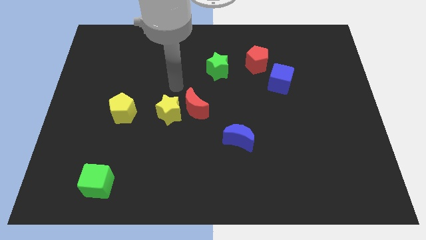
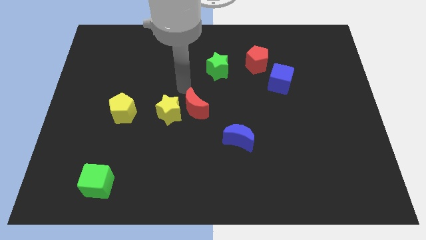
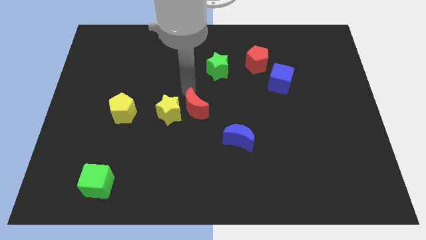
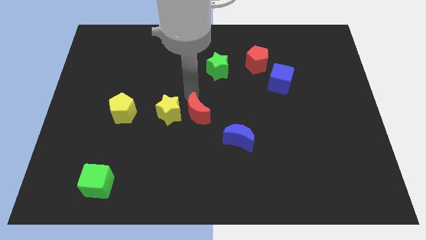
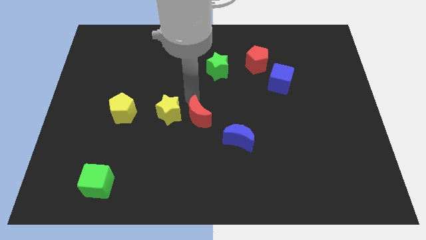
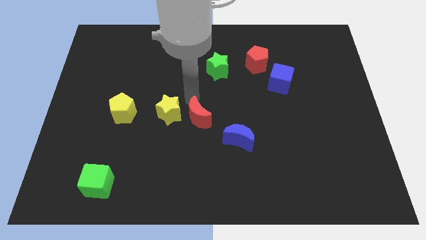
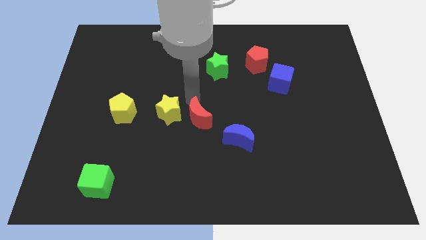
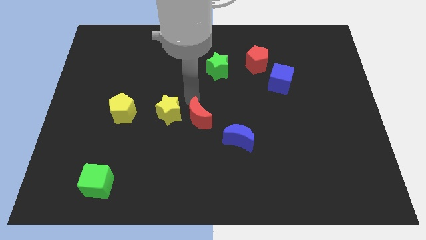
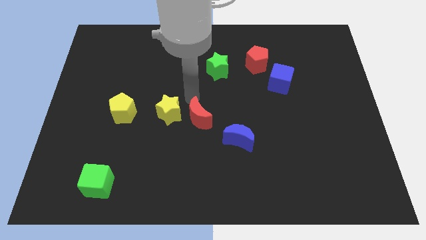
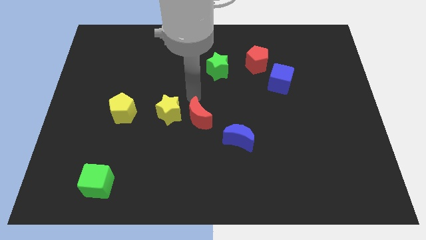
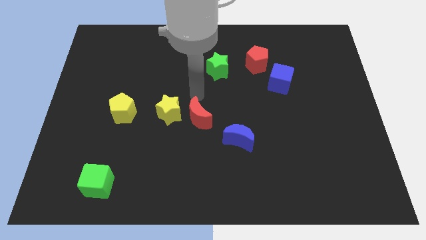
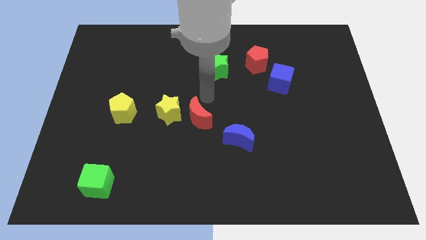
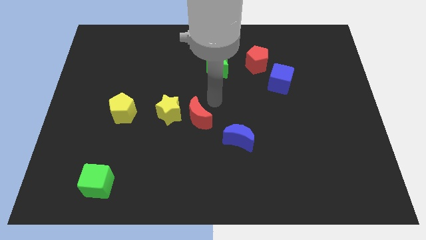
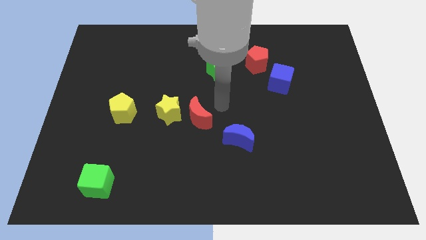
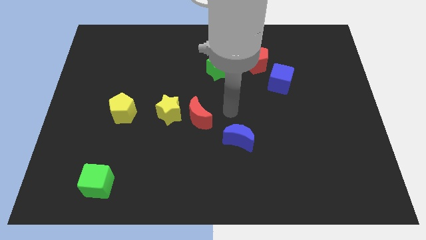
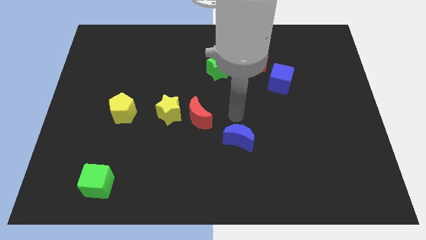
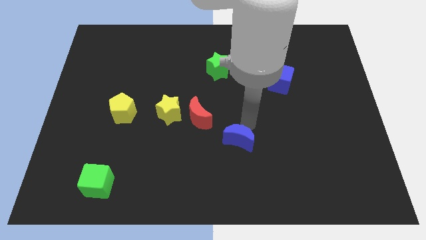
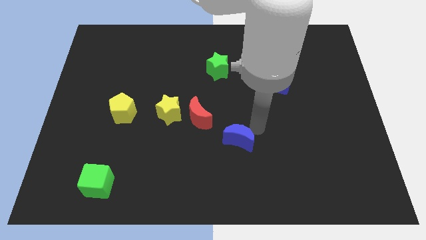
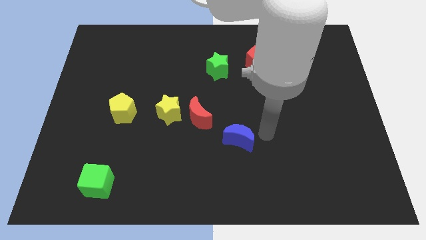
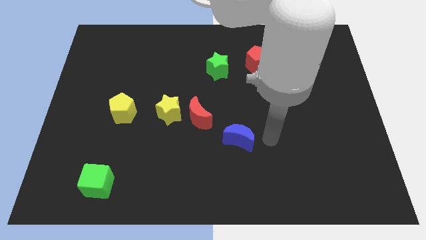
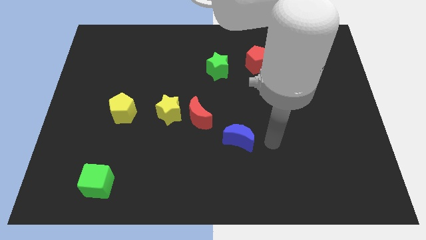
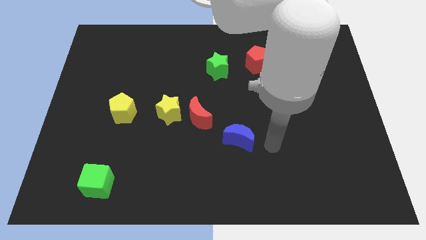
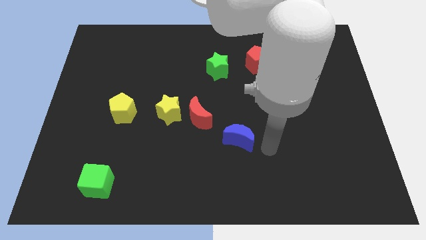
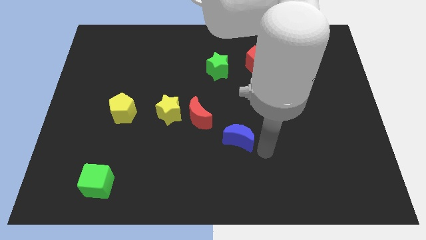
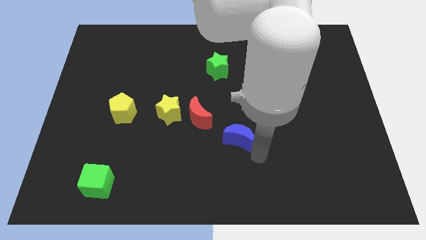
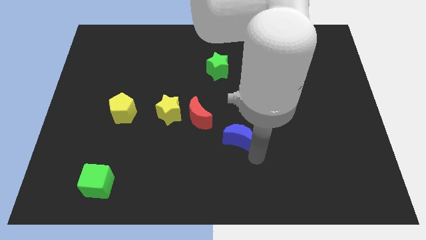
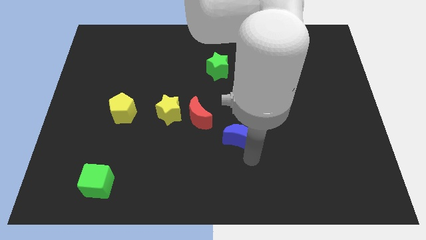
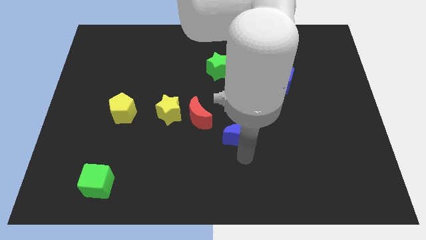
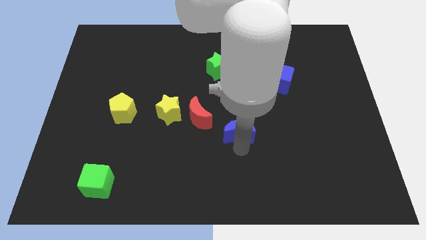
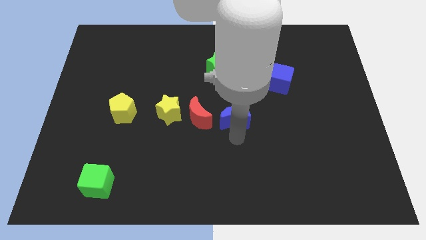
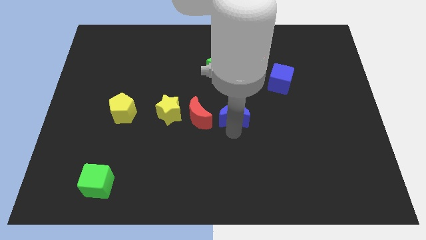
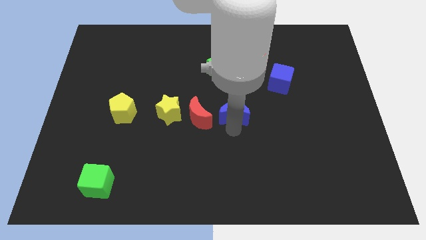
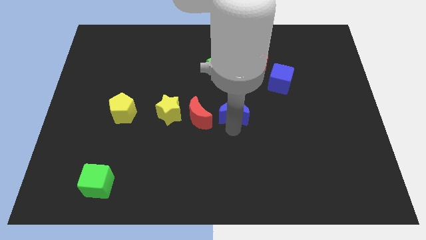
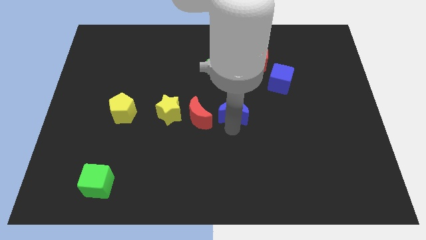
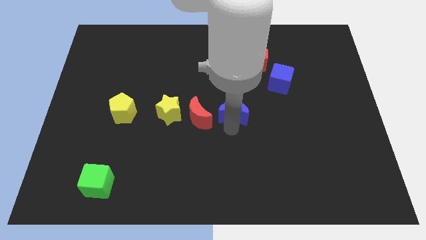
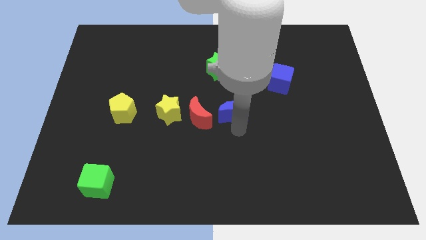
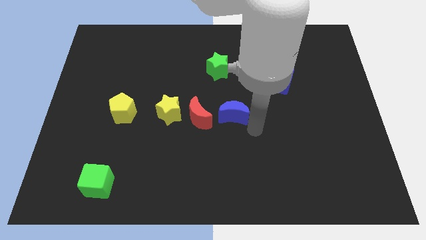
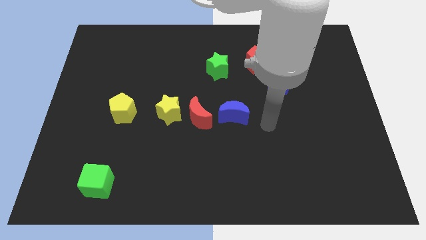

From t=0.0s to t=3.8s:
place the red and blue crescents in a line horizontally at the center of the board

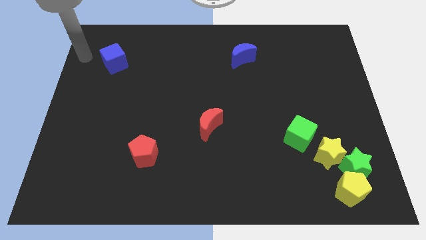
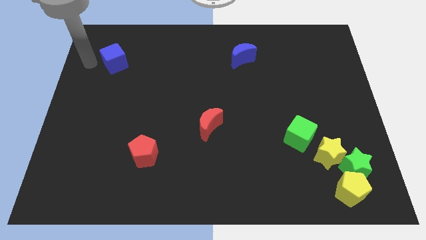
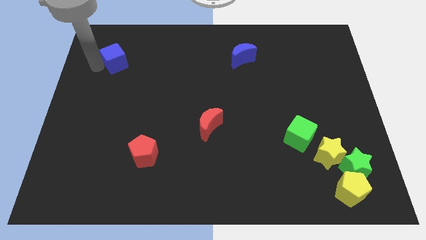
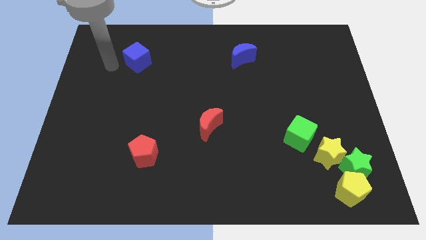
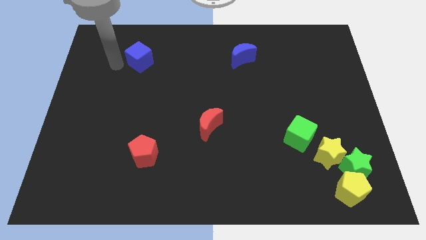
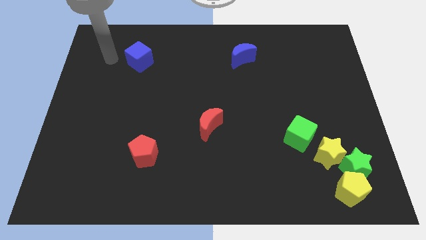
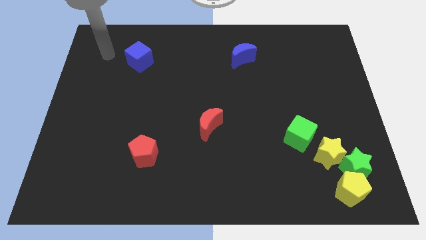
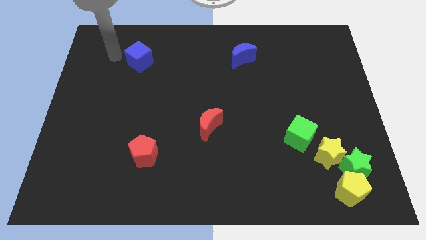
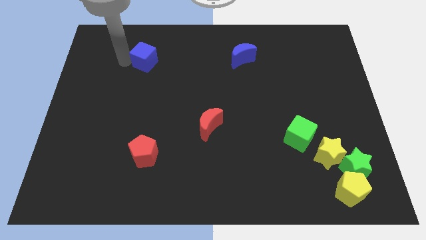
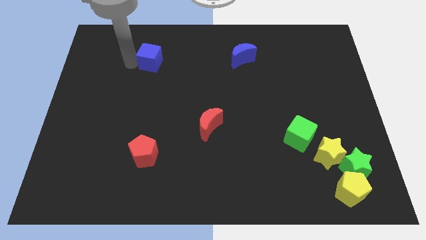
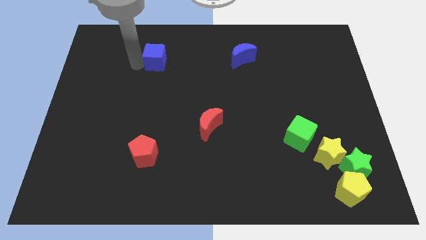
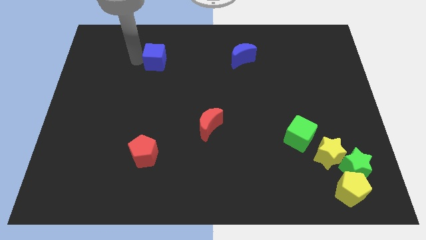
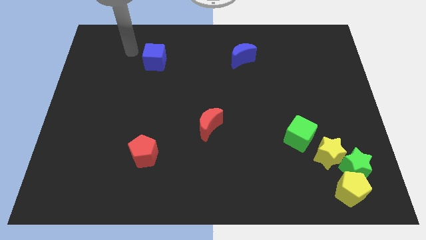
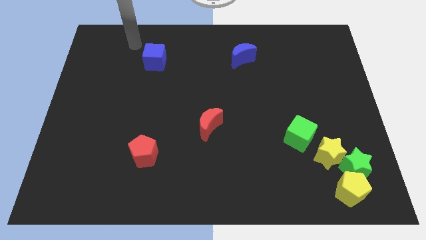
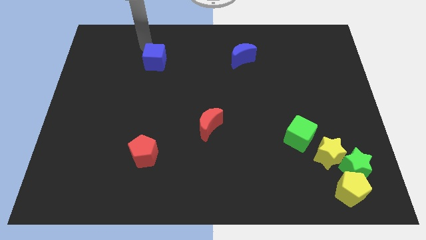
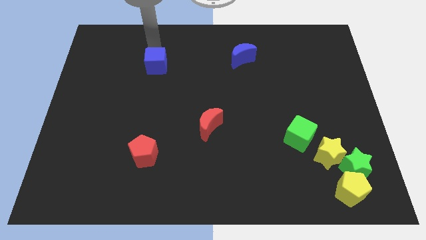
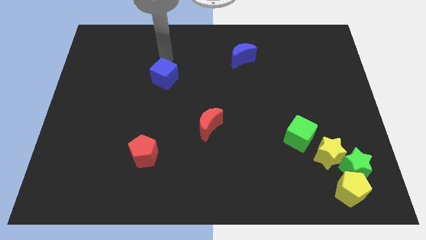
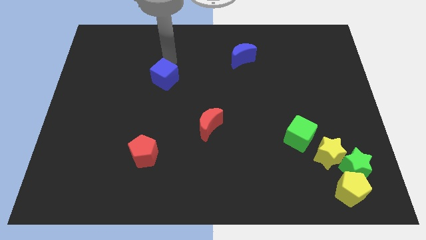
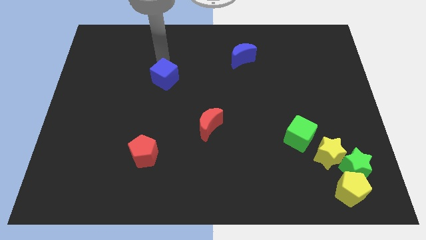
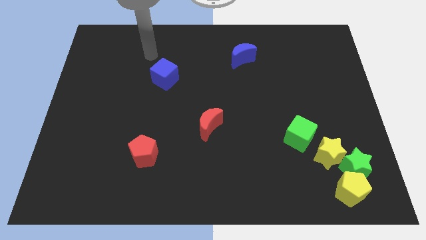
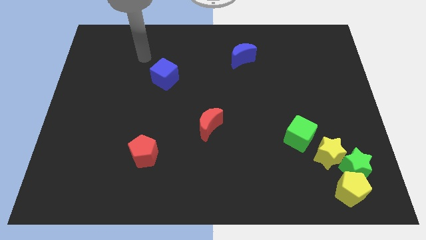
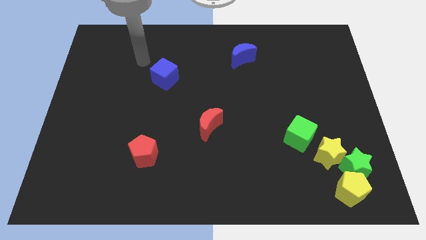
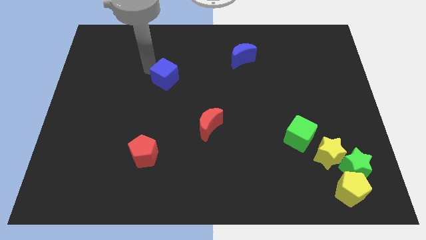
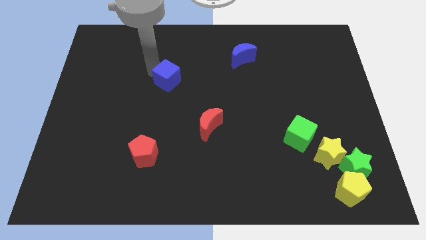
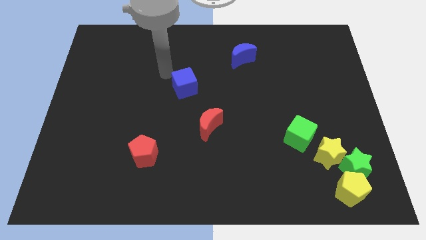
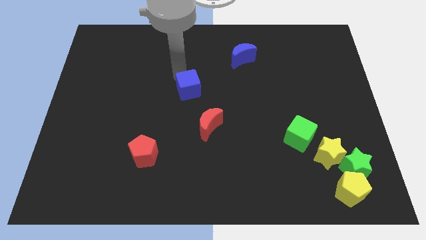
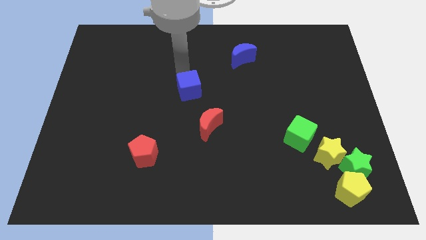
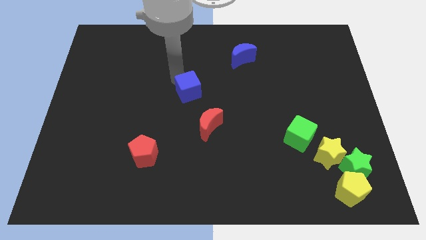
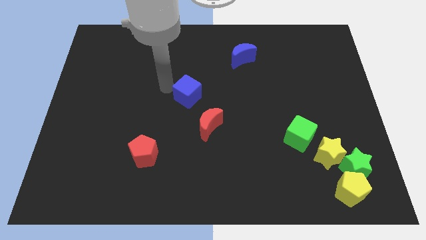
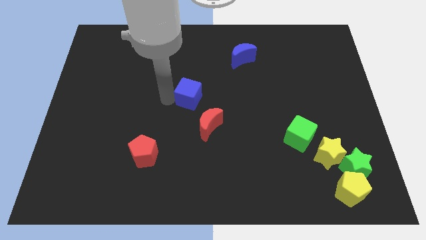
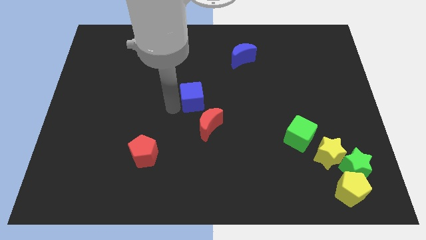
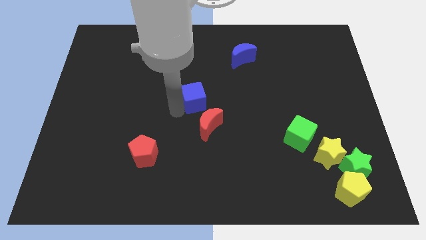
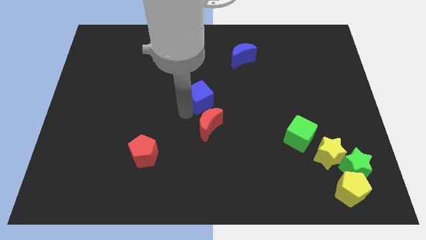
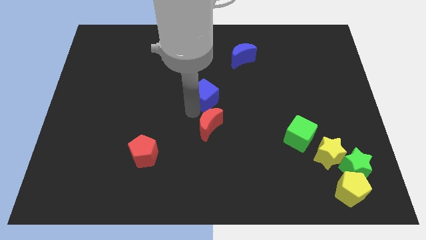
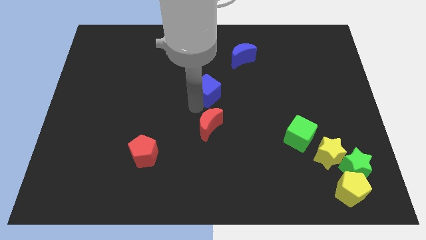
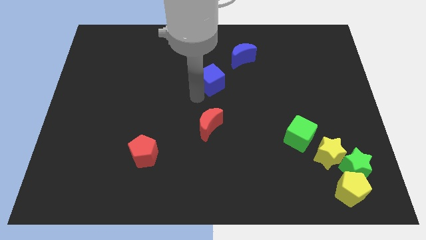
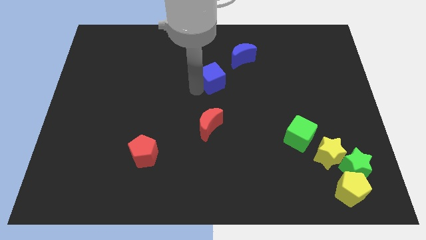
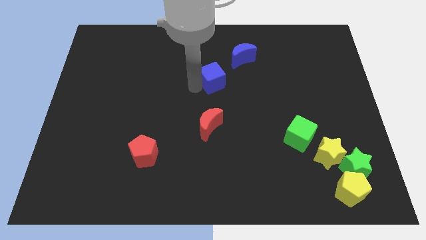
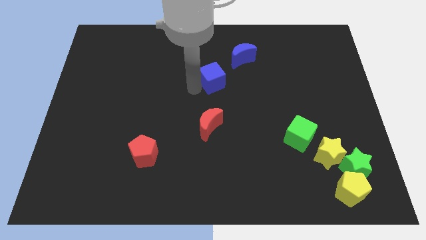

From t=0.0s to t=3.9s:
place the blue cube diagonally left to the blue moon

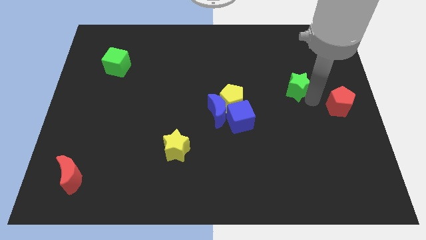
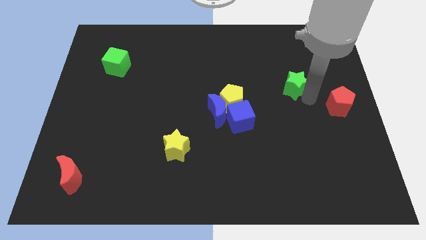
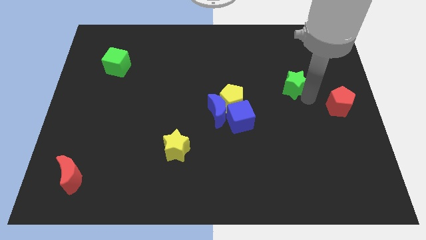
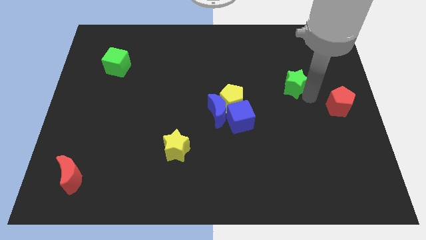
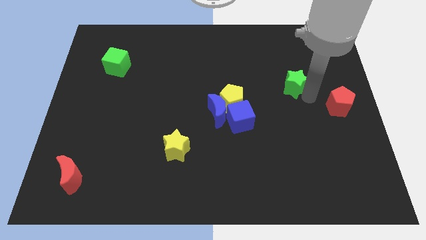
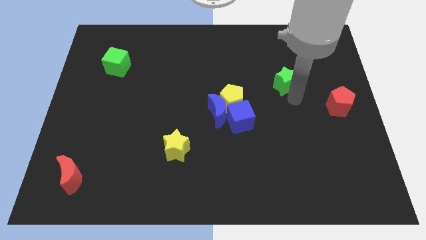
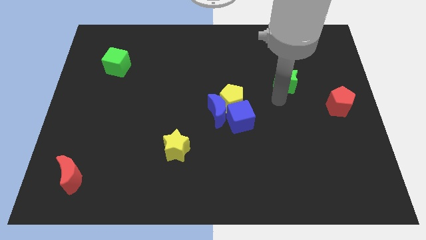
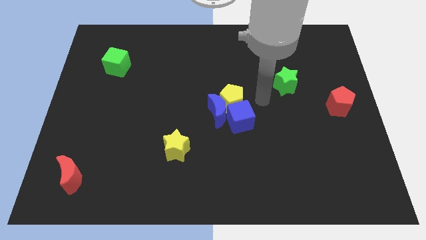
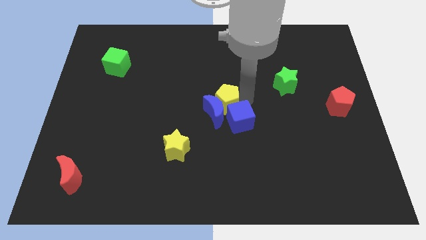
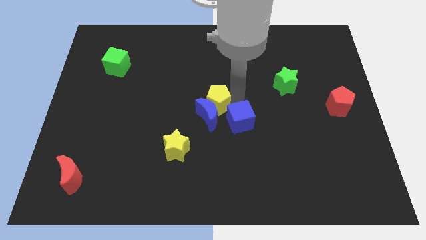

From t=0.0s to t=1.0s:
move arm away from green star

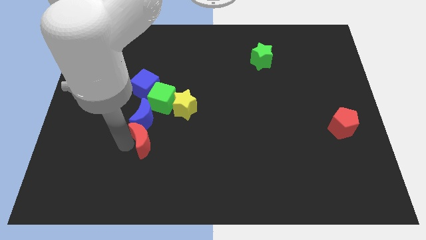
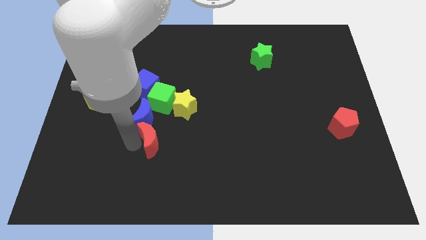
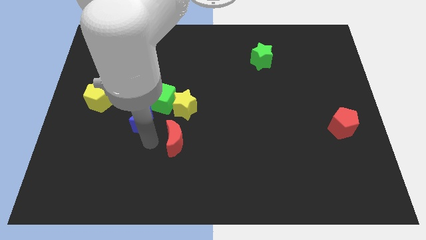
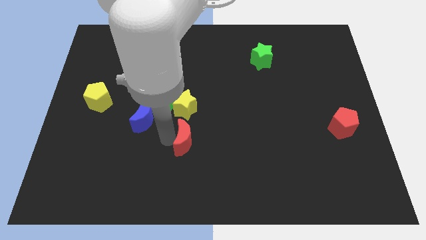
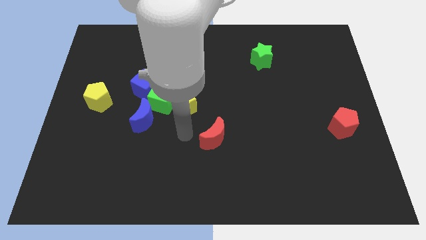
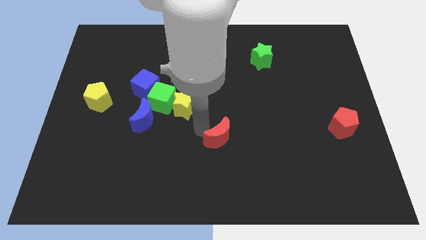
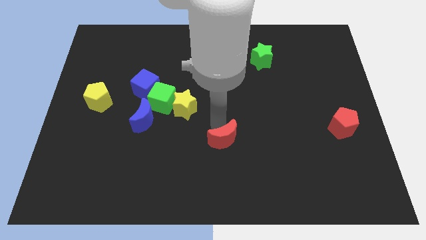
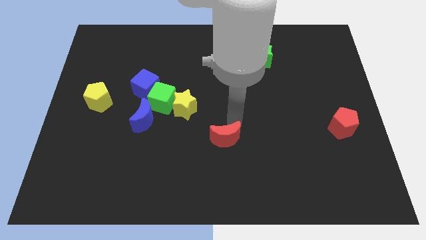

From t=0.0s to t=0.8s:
push red crescent diagonally towards yellow star
